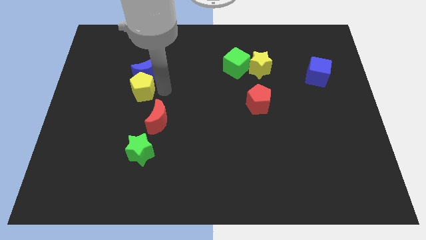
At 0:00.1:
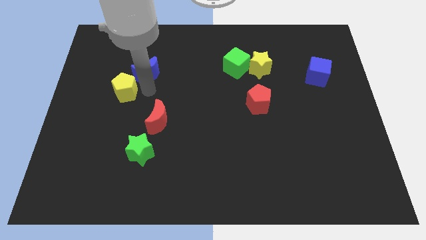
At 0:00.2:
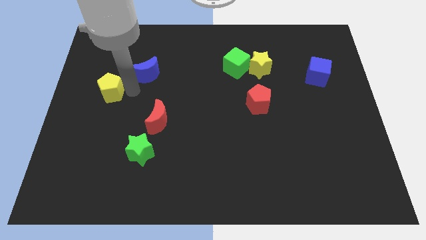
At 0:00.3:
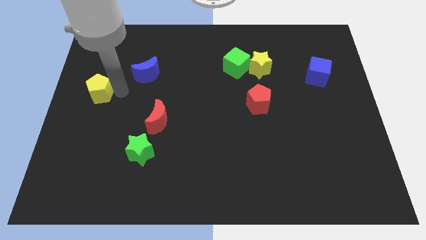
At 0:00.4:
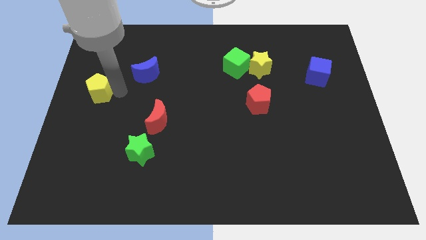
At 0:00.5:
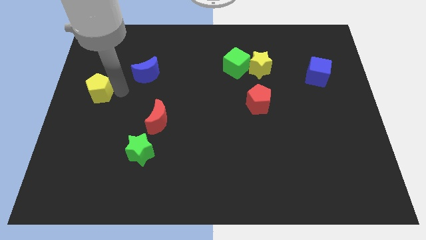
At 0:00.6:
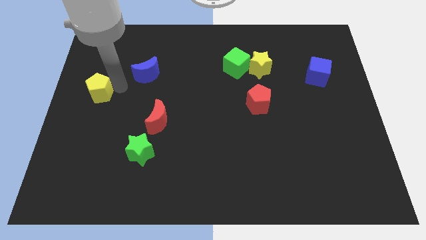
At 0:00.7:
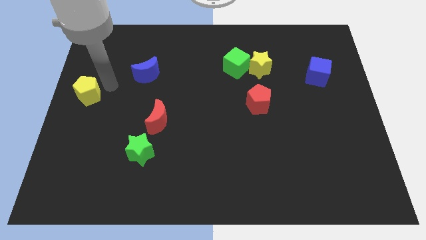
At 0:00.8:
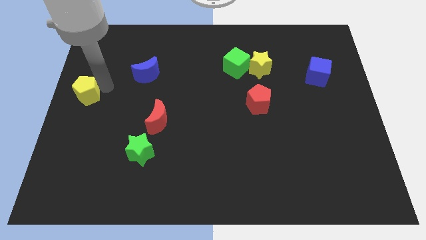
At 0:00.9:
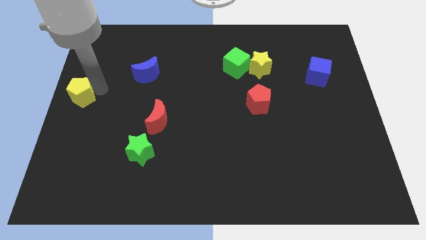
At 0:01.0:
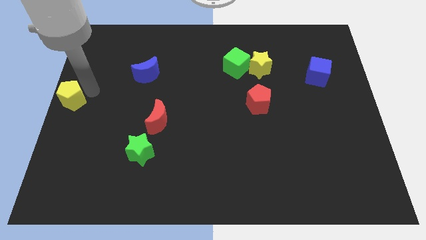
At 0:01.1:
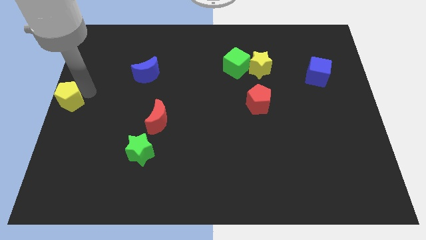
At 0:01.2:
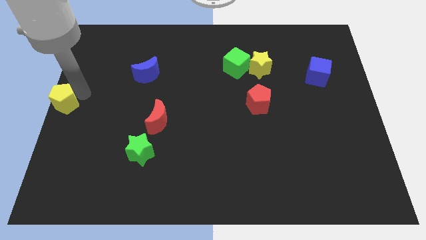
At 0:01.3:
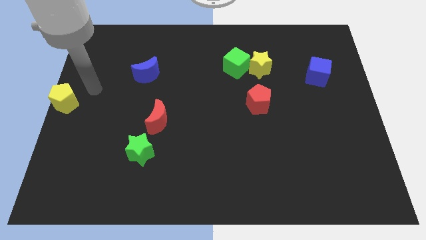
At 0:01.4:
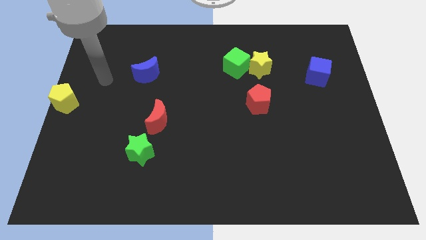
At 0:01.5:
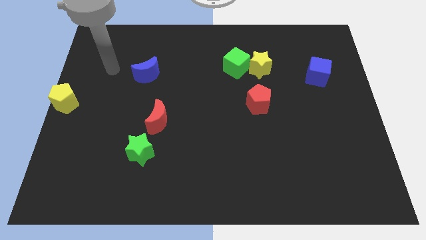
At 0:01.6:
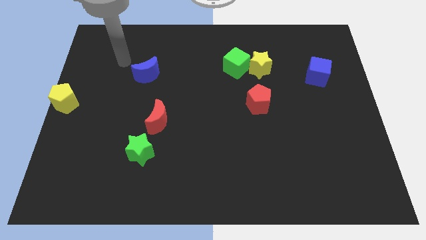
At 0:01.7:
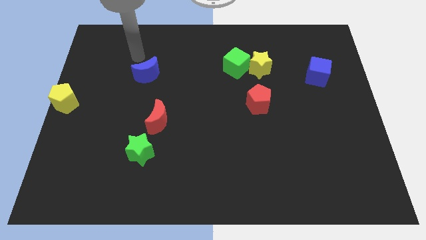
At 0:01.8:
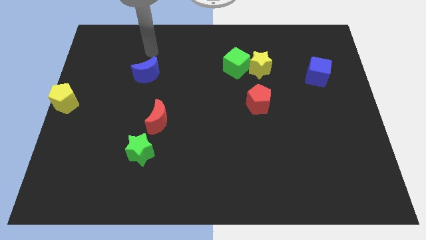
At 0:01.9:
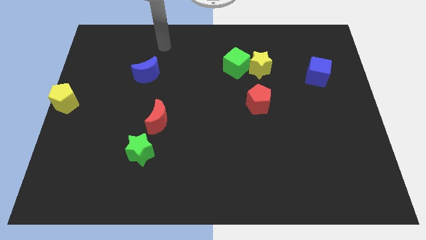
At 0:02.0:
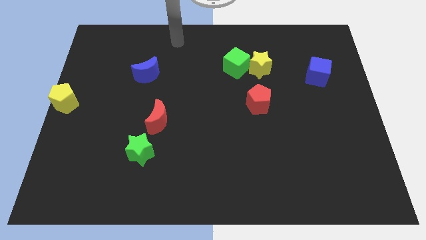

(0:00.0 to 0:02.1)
move the yellow pentagon away from the blue crescent

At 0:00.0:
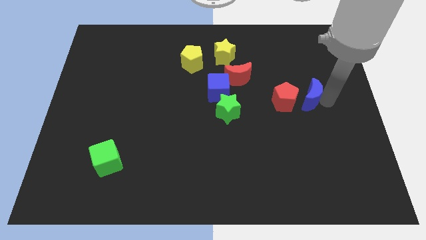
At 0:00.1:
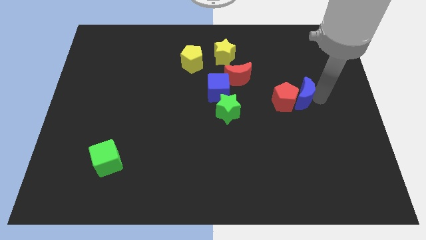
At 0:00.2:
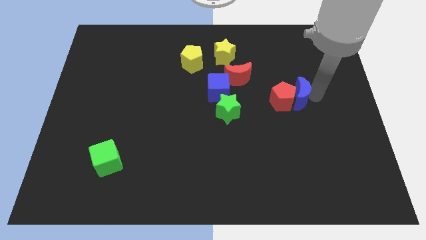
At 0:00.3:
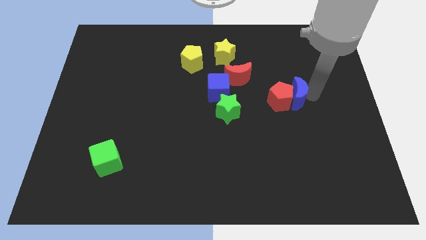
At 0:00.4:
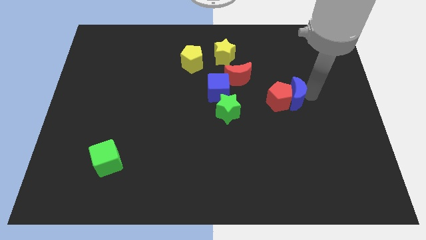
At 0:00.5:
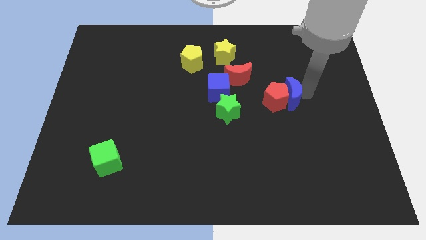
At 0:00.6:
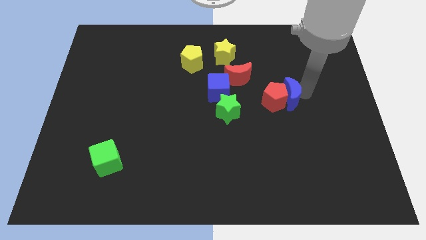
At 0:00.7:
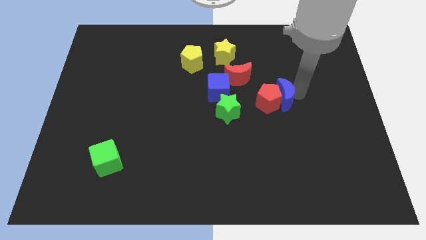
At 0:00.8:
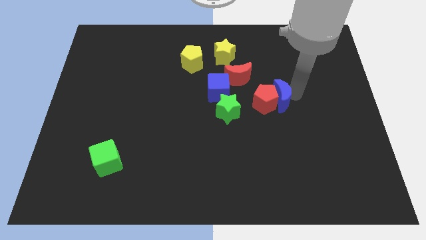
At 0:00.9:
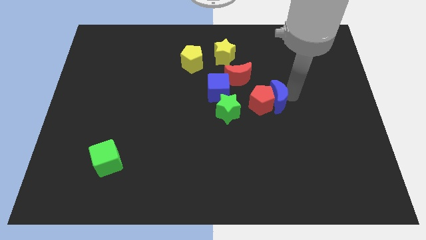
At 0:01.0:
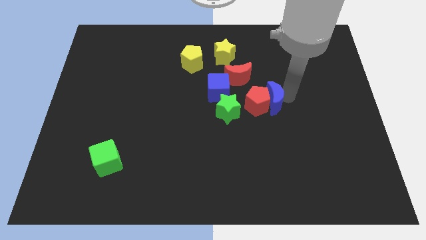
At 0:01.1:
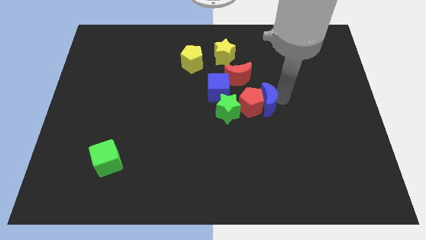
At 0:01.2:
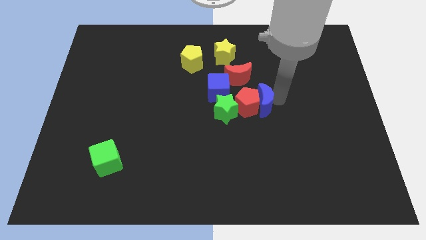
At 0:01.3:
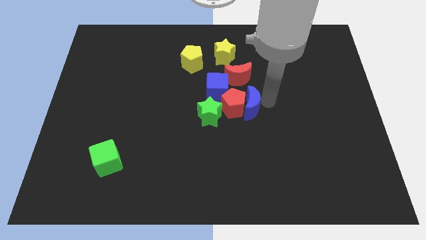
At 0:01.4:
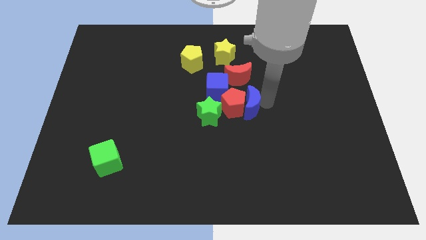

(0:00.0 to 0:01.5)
push the blue moon to the left

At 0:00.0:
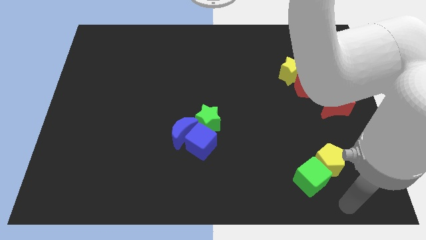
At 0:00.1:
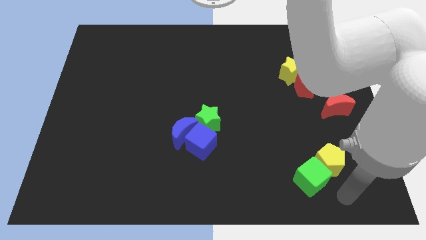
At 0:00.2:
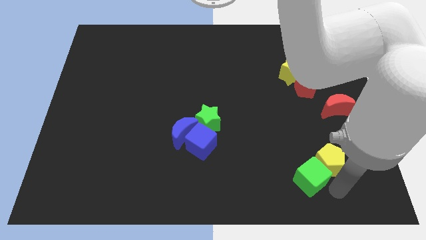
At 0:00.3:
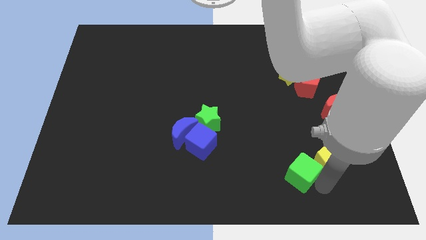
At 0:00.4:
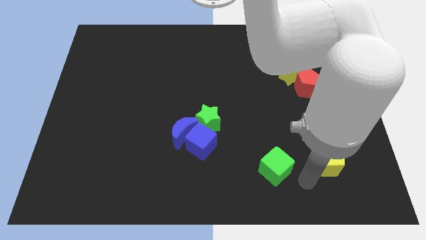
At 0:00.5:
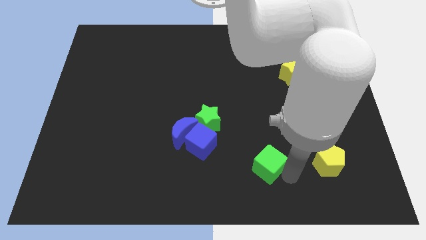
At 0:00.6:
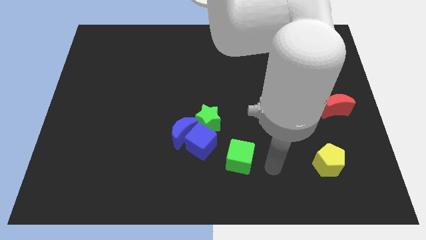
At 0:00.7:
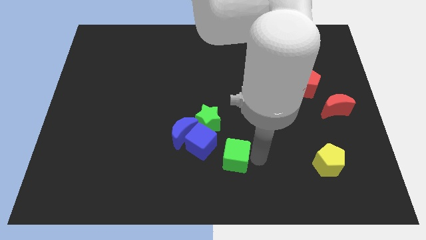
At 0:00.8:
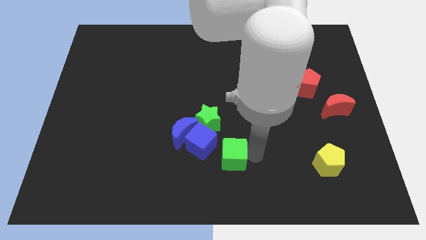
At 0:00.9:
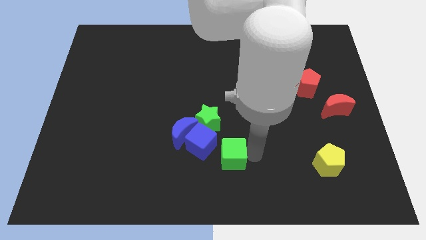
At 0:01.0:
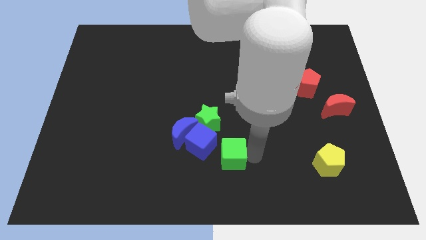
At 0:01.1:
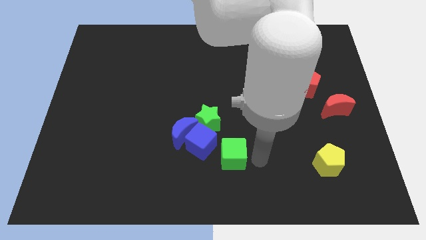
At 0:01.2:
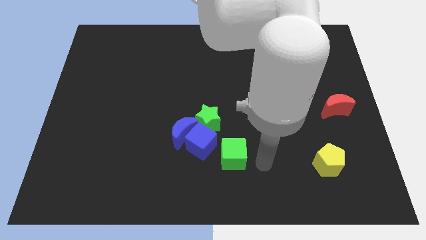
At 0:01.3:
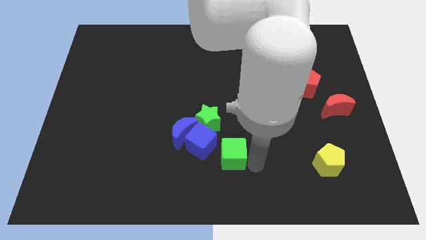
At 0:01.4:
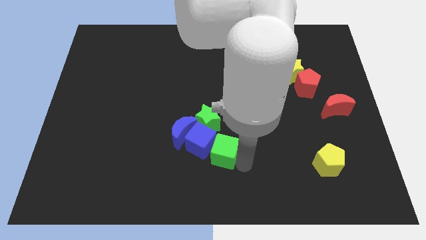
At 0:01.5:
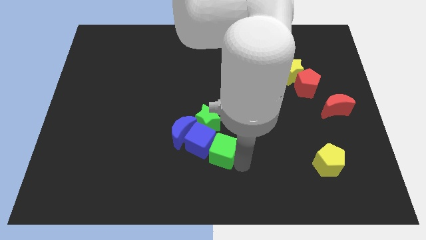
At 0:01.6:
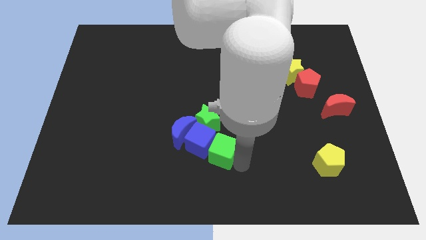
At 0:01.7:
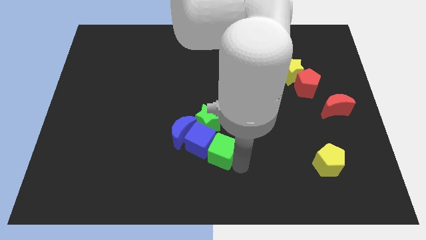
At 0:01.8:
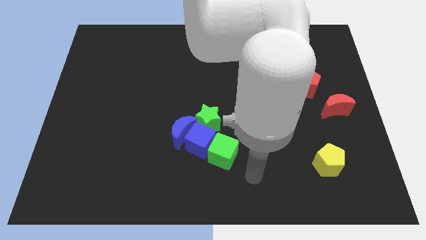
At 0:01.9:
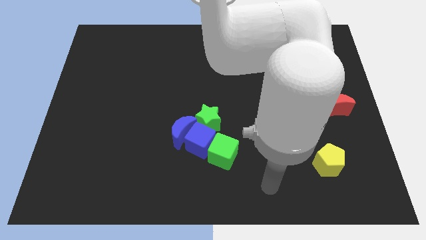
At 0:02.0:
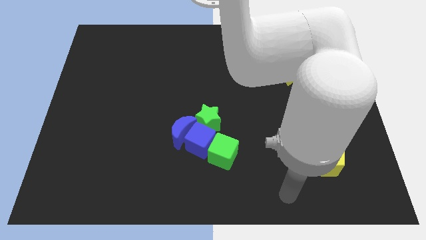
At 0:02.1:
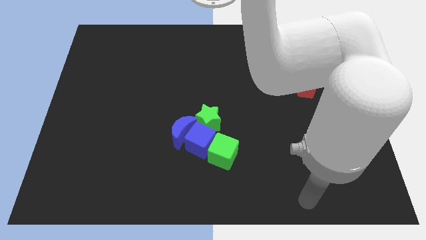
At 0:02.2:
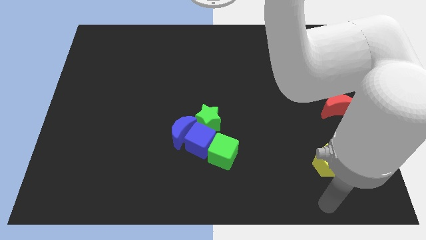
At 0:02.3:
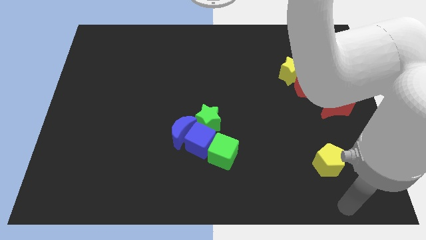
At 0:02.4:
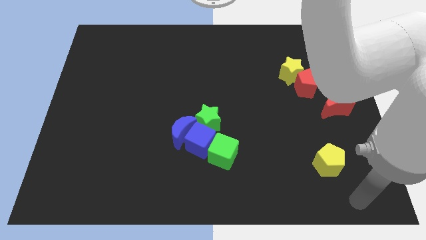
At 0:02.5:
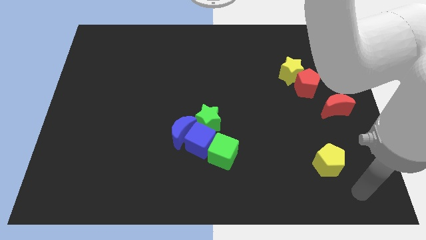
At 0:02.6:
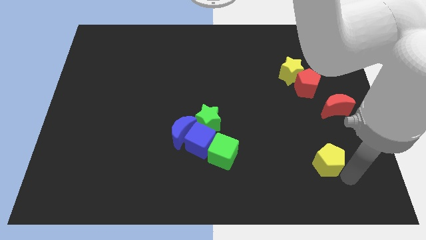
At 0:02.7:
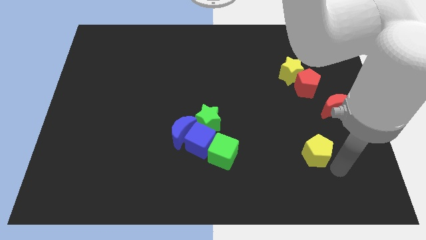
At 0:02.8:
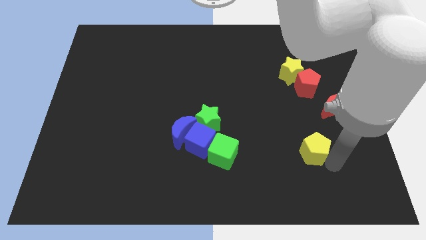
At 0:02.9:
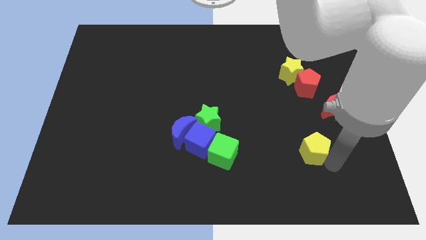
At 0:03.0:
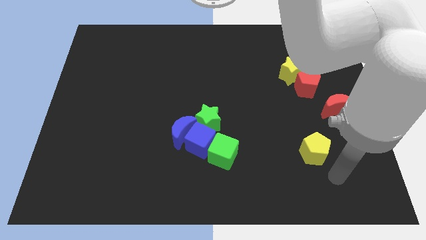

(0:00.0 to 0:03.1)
drag green cube towards blue cube

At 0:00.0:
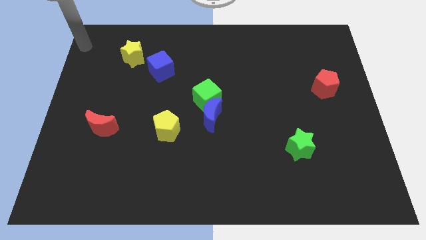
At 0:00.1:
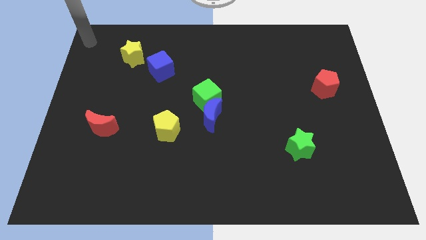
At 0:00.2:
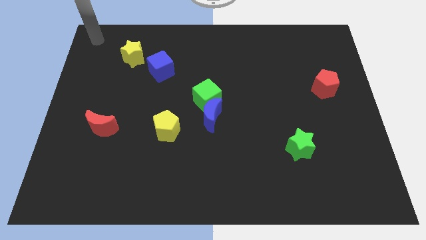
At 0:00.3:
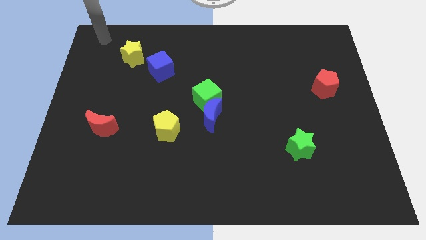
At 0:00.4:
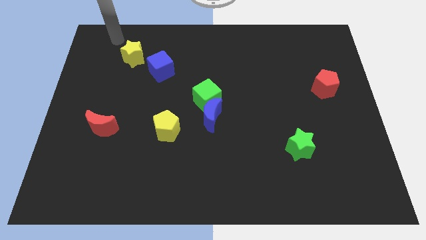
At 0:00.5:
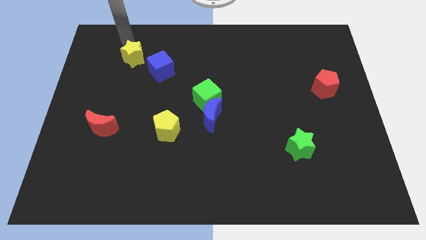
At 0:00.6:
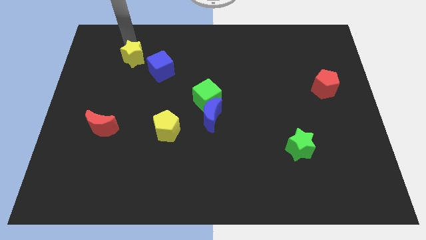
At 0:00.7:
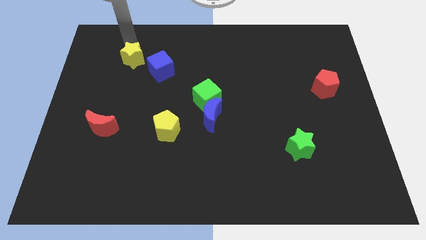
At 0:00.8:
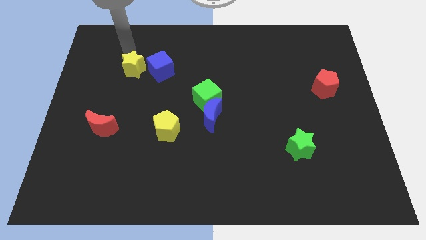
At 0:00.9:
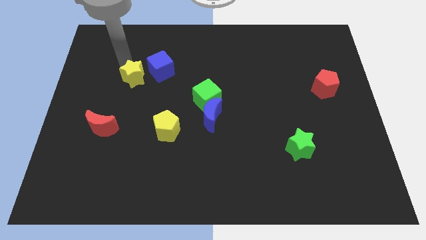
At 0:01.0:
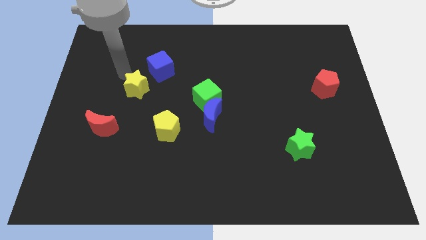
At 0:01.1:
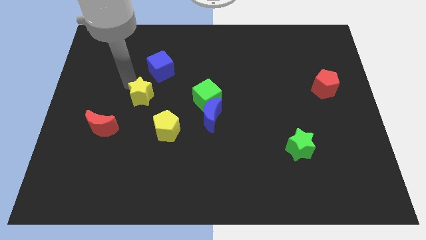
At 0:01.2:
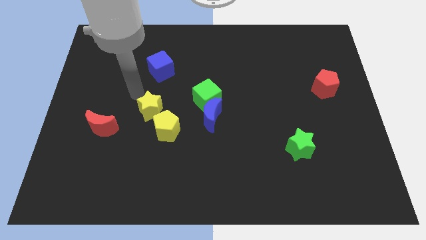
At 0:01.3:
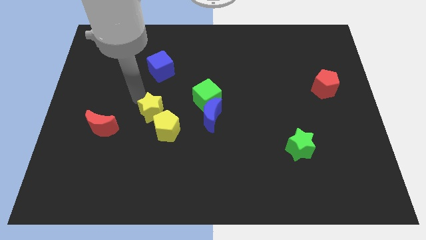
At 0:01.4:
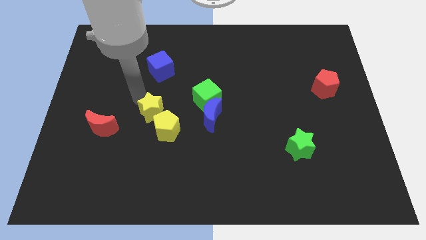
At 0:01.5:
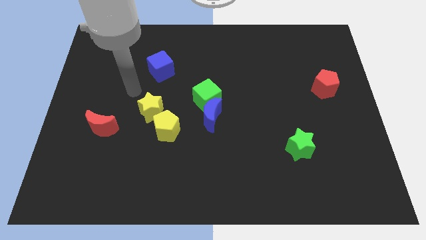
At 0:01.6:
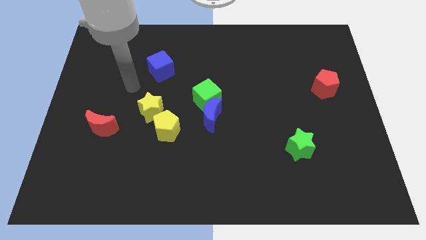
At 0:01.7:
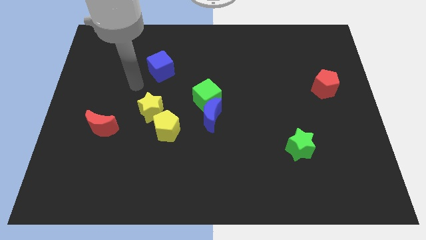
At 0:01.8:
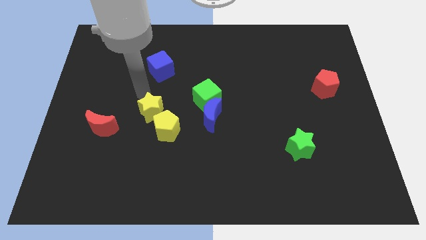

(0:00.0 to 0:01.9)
push the yellow star into the yellow pentagon

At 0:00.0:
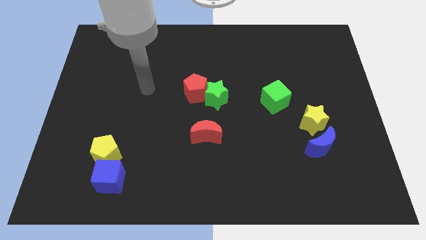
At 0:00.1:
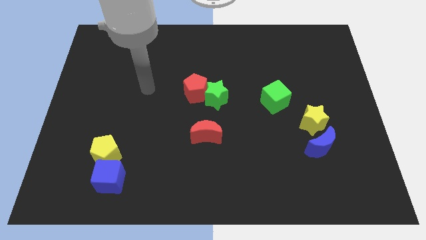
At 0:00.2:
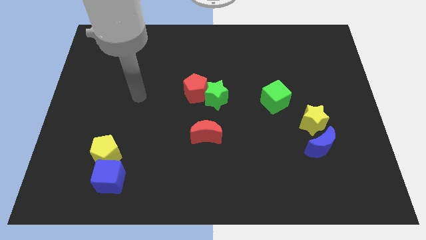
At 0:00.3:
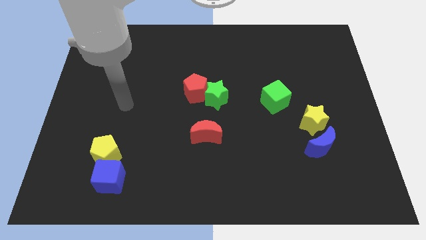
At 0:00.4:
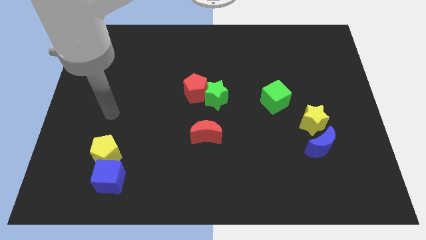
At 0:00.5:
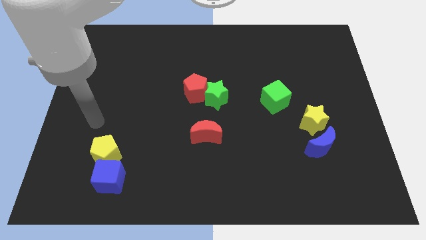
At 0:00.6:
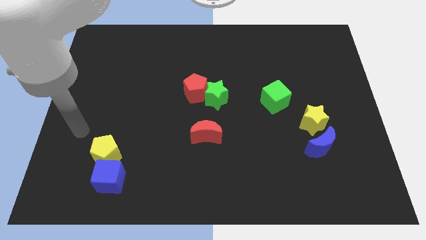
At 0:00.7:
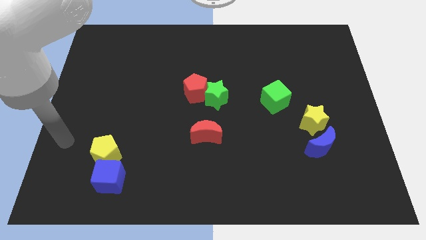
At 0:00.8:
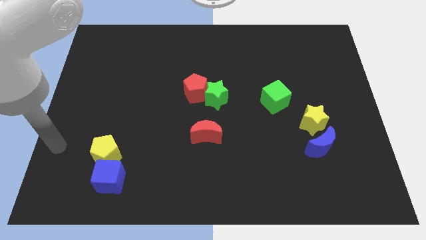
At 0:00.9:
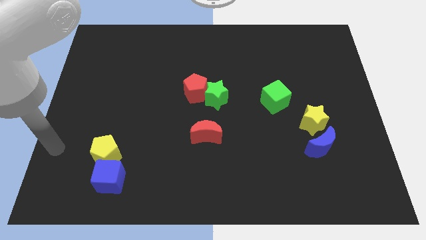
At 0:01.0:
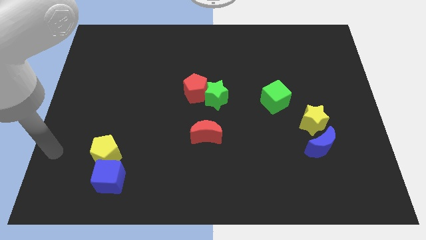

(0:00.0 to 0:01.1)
place arm on the left side of yellow pentagon
